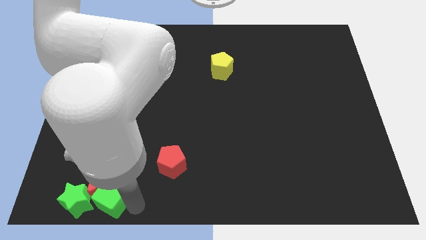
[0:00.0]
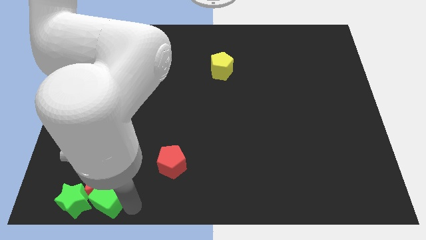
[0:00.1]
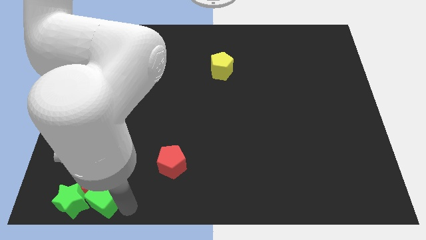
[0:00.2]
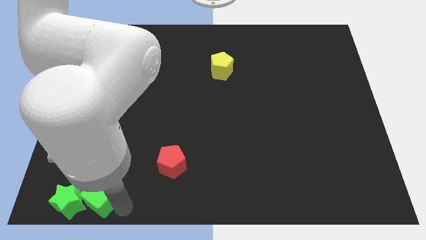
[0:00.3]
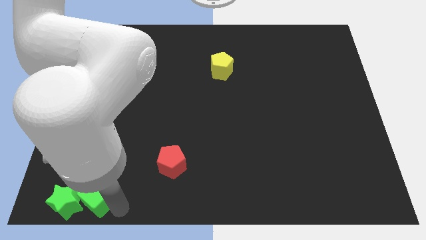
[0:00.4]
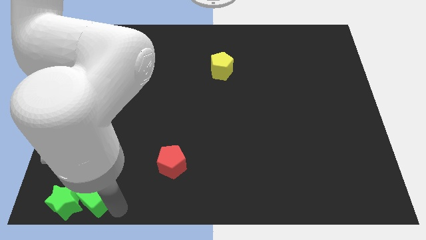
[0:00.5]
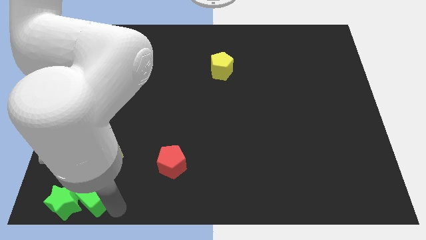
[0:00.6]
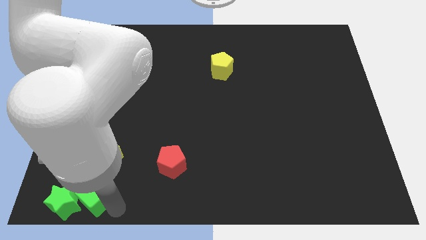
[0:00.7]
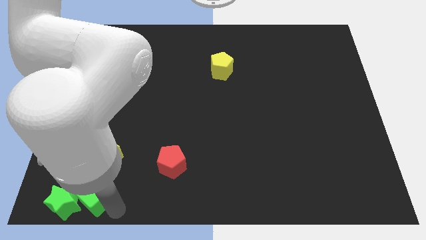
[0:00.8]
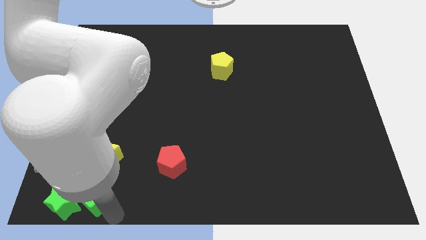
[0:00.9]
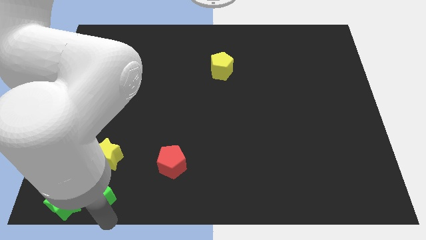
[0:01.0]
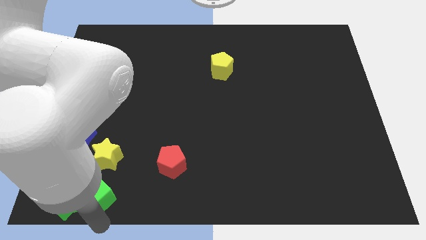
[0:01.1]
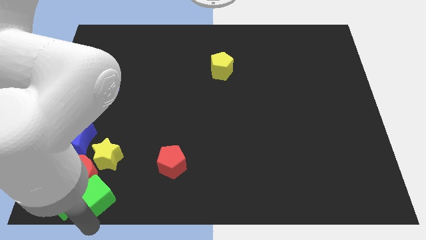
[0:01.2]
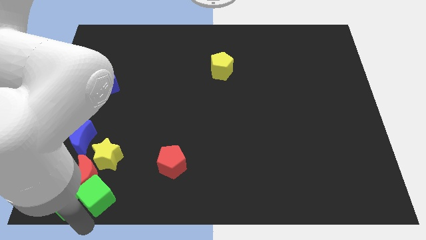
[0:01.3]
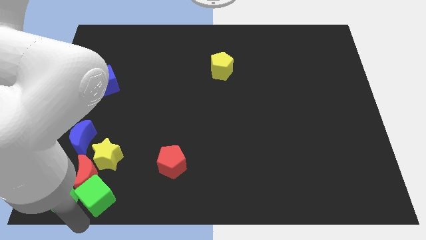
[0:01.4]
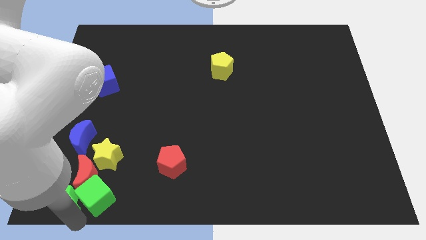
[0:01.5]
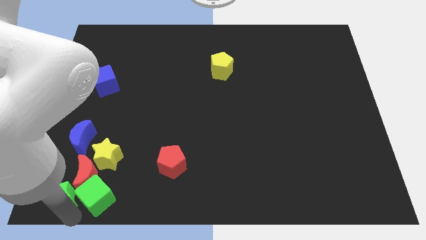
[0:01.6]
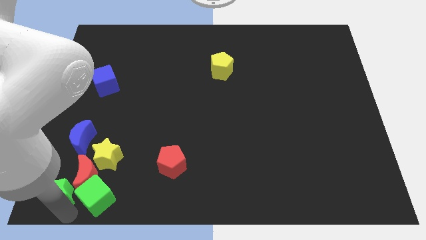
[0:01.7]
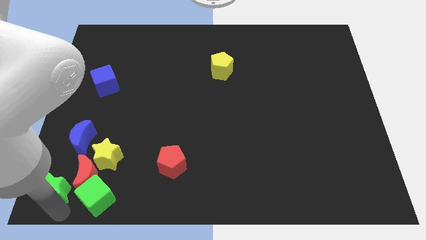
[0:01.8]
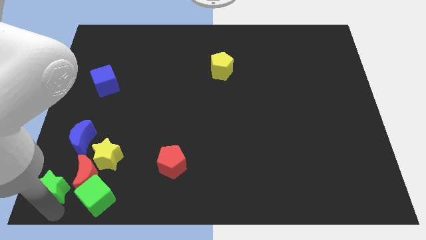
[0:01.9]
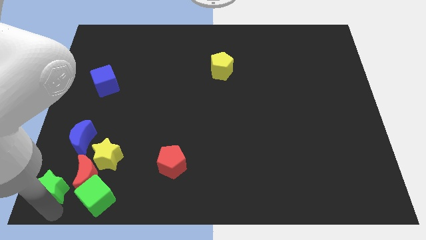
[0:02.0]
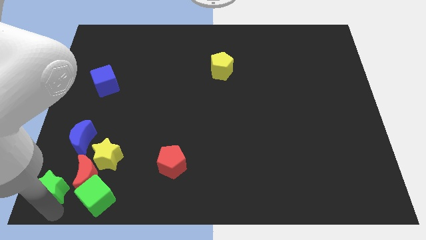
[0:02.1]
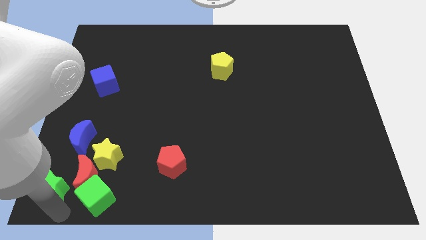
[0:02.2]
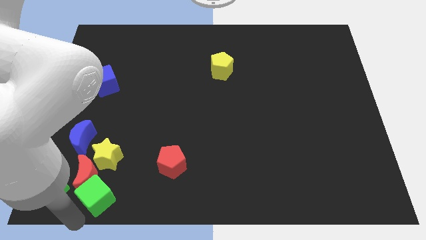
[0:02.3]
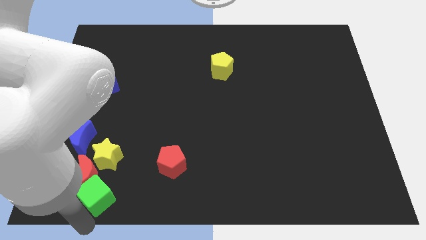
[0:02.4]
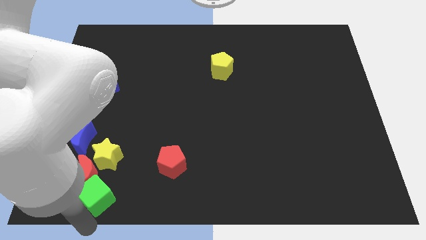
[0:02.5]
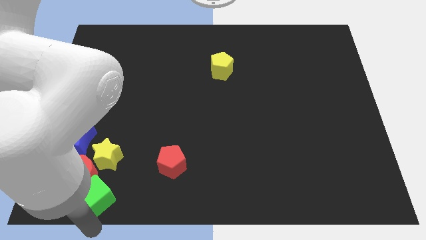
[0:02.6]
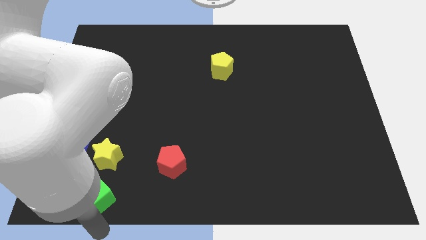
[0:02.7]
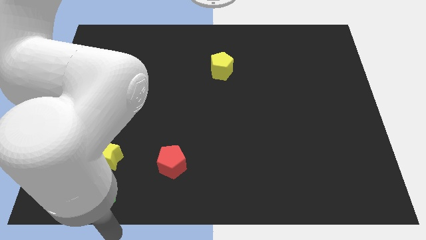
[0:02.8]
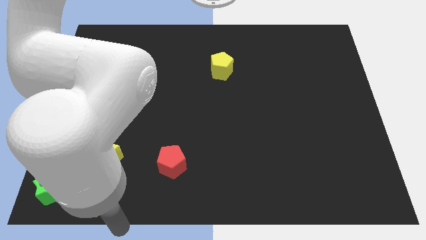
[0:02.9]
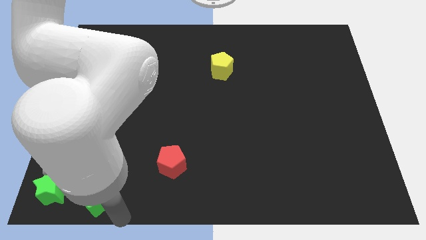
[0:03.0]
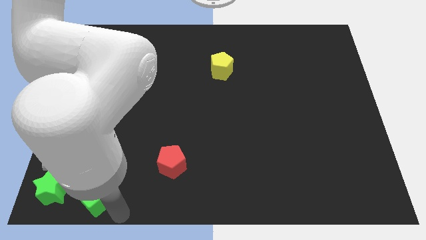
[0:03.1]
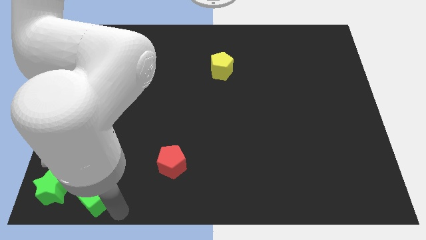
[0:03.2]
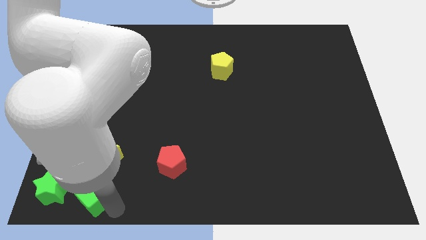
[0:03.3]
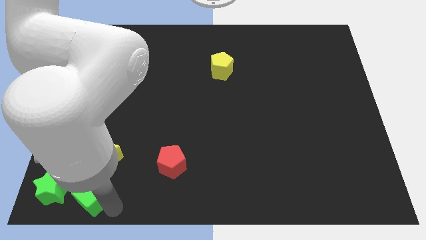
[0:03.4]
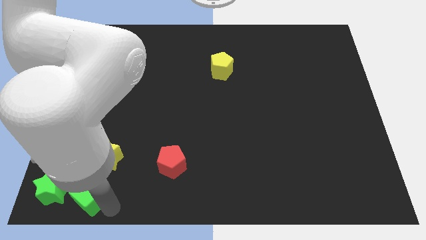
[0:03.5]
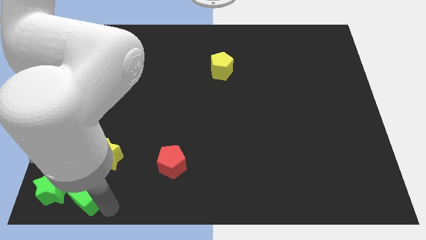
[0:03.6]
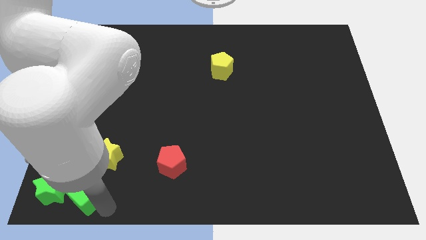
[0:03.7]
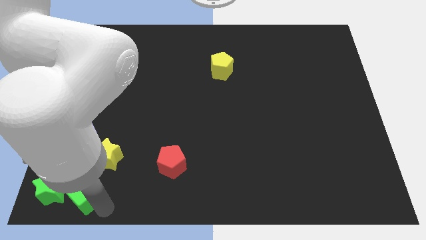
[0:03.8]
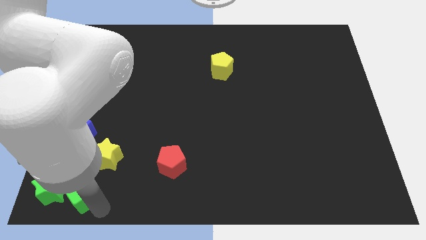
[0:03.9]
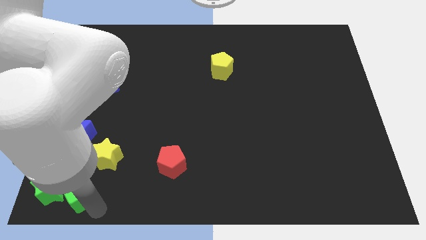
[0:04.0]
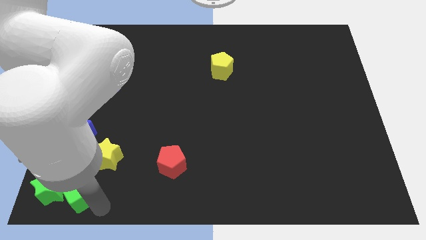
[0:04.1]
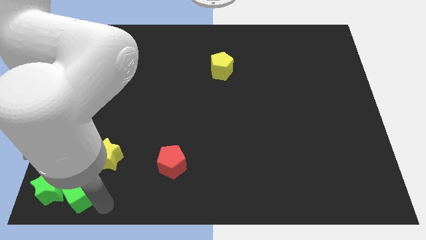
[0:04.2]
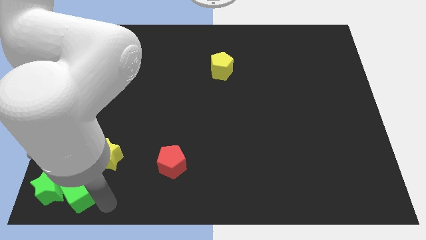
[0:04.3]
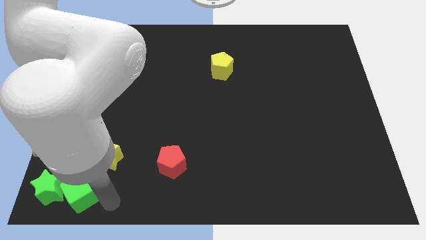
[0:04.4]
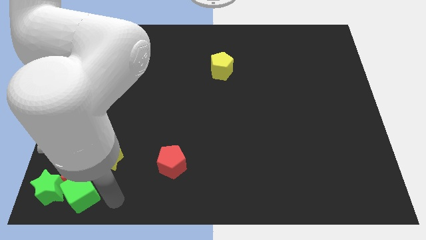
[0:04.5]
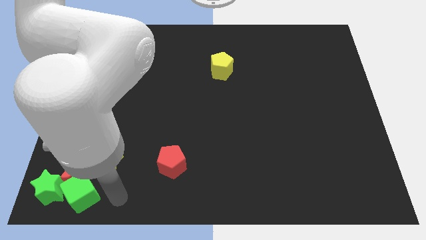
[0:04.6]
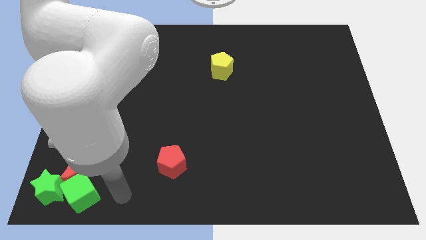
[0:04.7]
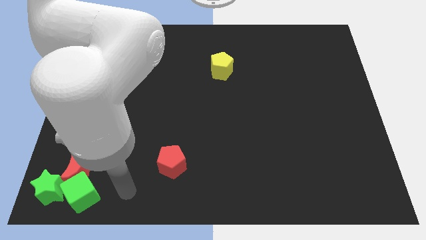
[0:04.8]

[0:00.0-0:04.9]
place both the green blocks at the bottom left corner of the board

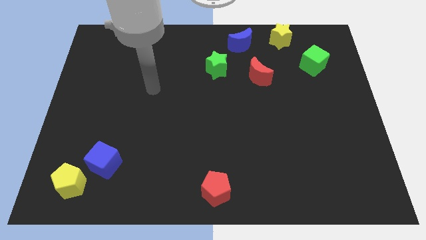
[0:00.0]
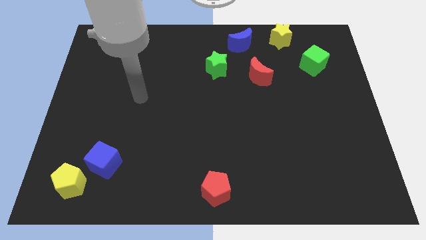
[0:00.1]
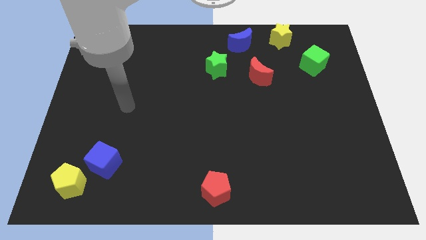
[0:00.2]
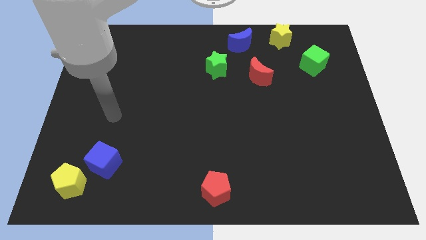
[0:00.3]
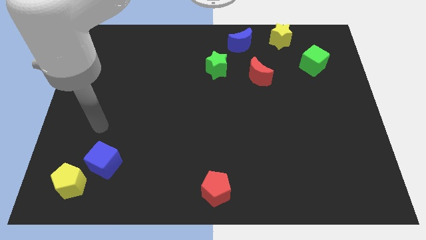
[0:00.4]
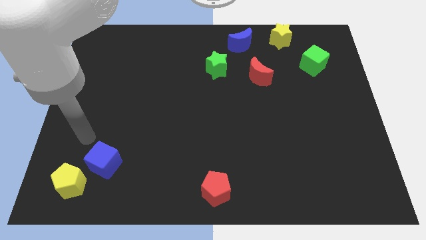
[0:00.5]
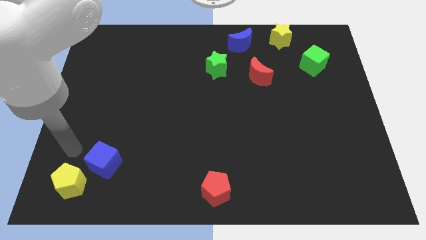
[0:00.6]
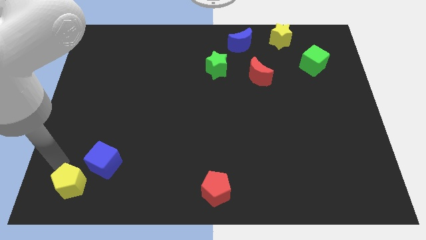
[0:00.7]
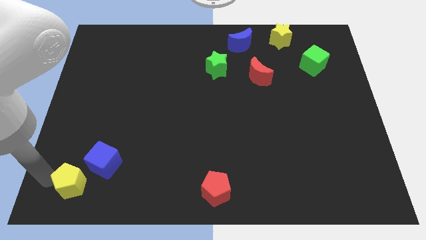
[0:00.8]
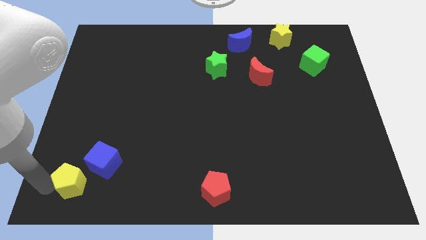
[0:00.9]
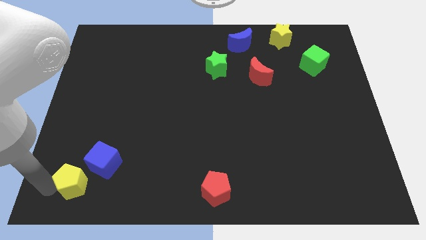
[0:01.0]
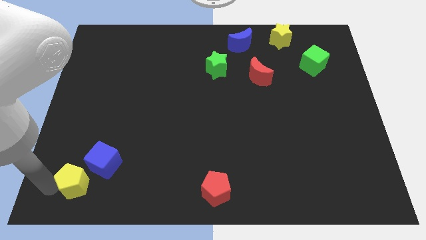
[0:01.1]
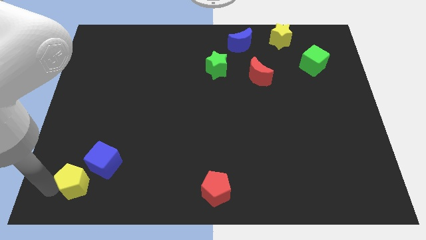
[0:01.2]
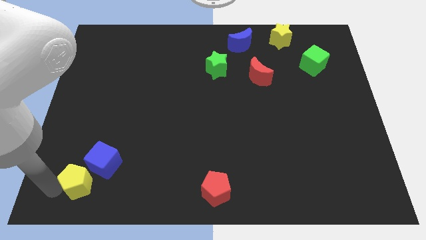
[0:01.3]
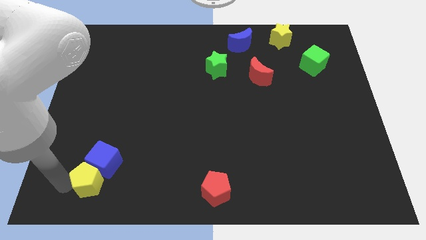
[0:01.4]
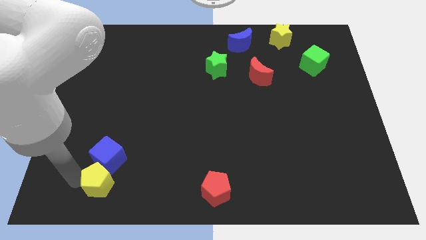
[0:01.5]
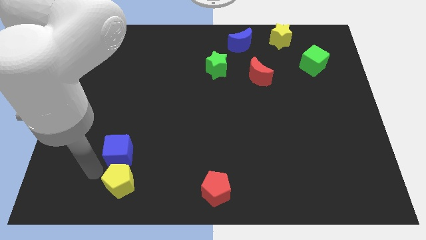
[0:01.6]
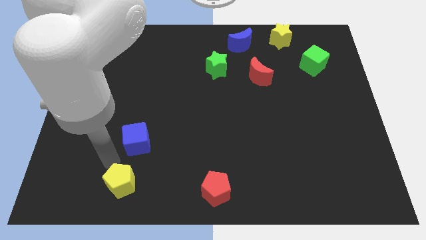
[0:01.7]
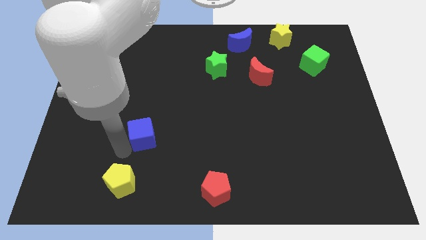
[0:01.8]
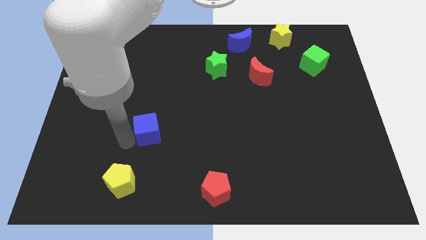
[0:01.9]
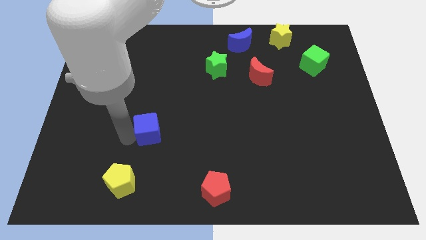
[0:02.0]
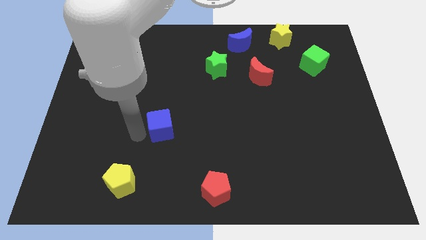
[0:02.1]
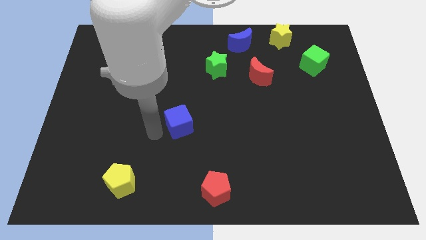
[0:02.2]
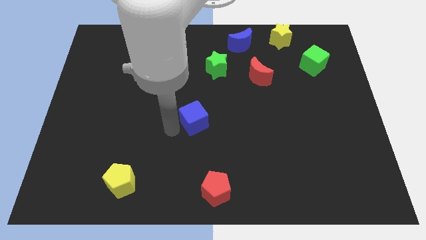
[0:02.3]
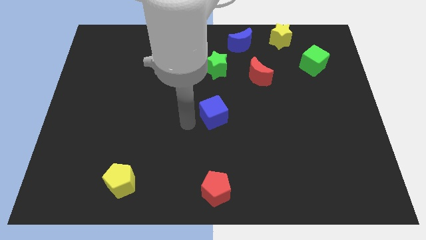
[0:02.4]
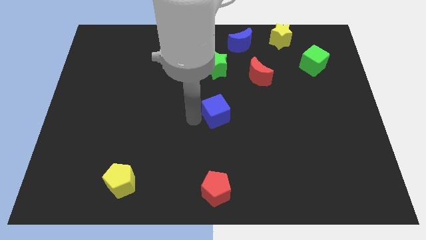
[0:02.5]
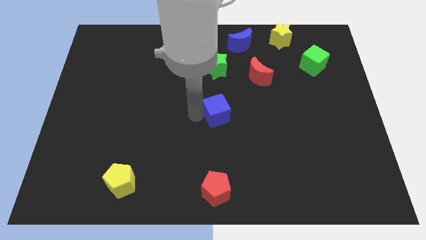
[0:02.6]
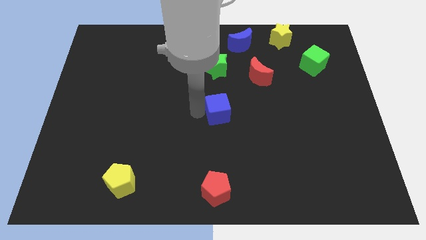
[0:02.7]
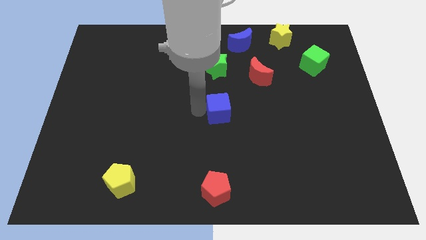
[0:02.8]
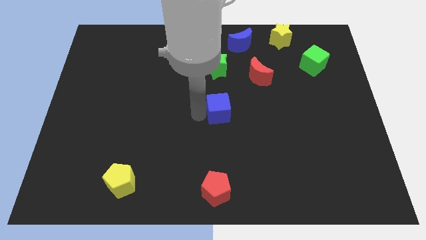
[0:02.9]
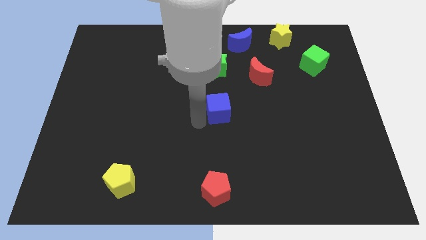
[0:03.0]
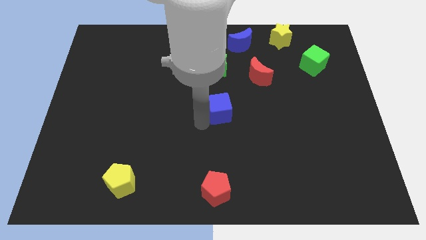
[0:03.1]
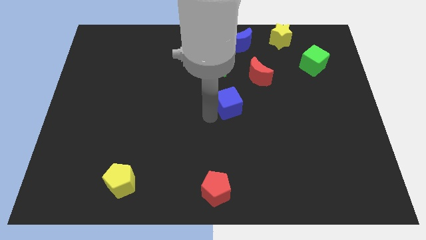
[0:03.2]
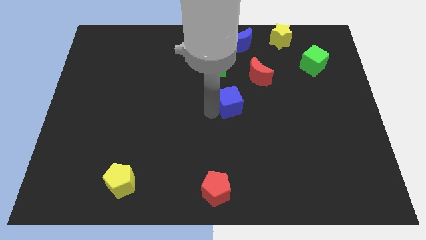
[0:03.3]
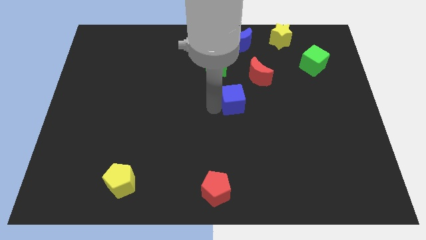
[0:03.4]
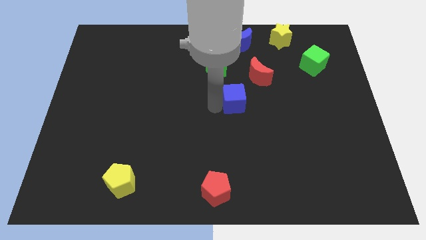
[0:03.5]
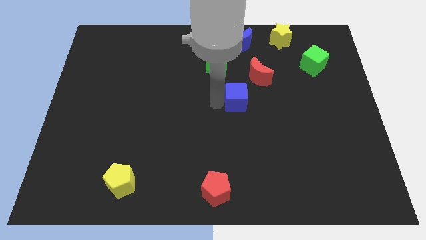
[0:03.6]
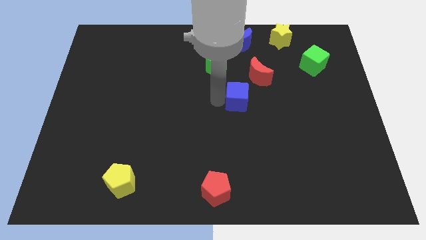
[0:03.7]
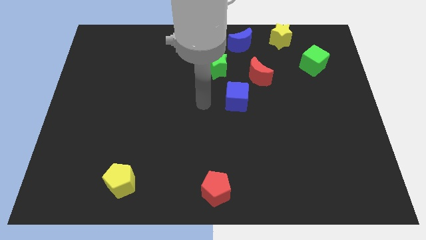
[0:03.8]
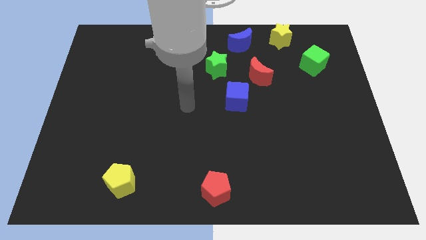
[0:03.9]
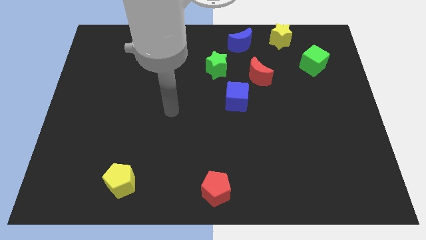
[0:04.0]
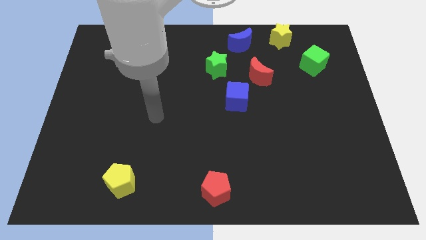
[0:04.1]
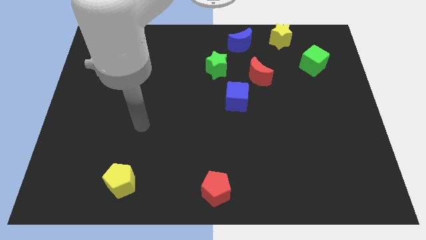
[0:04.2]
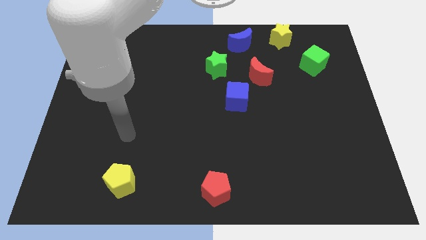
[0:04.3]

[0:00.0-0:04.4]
drag the blue cube to the bottom right side of the green star
